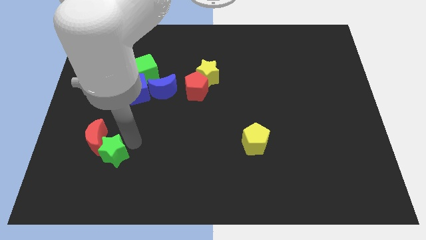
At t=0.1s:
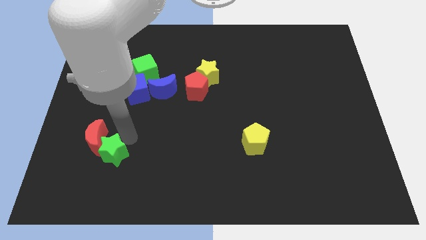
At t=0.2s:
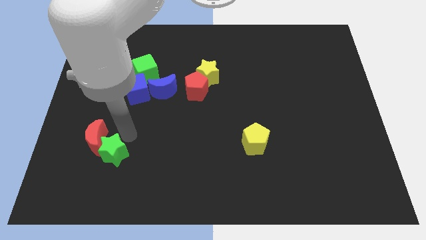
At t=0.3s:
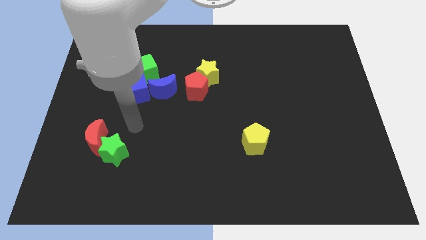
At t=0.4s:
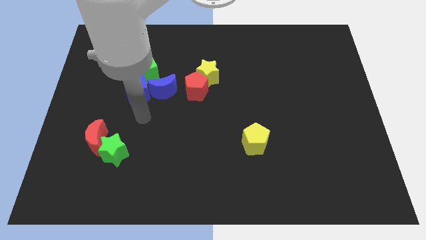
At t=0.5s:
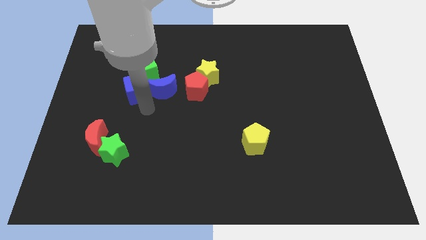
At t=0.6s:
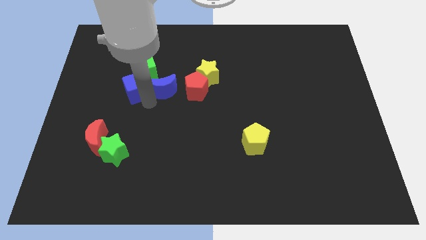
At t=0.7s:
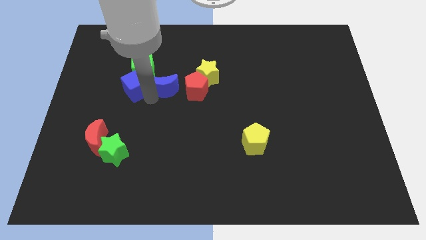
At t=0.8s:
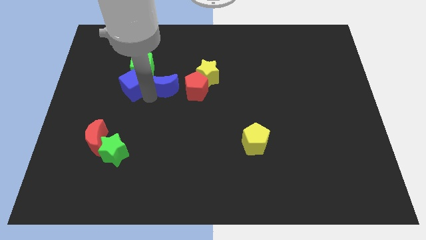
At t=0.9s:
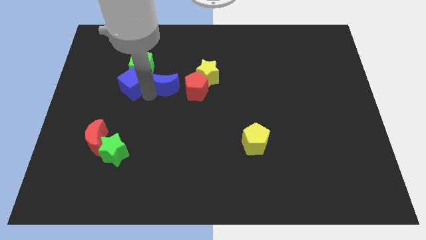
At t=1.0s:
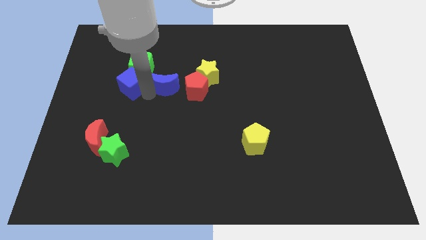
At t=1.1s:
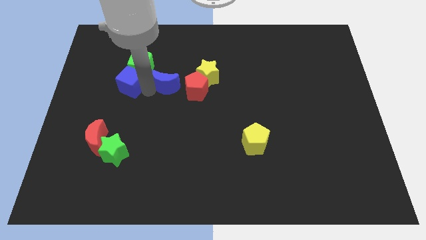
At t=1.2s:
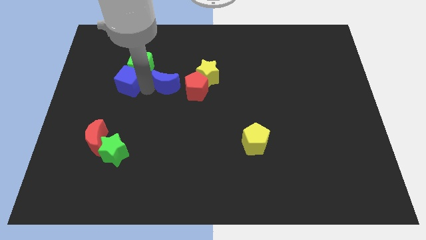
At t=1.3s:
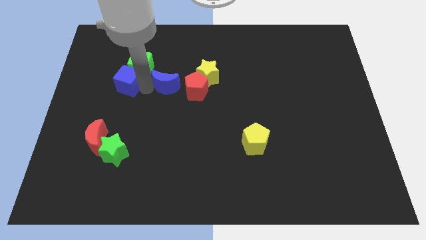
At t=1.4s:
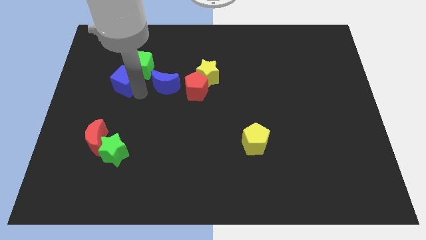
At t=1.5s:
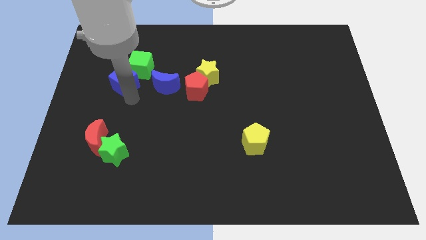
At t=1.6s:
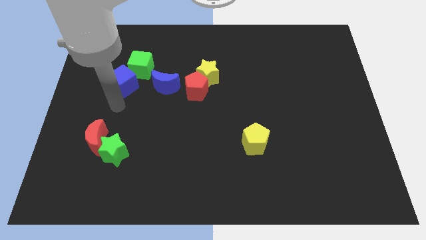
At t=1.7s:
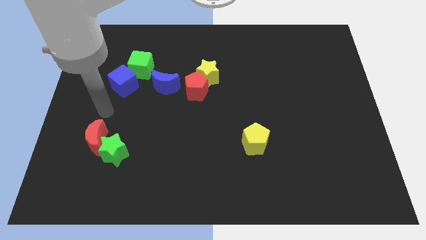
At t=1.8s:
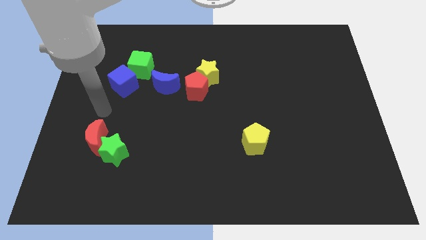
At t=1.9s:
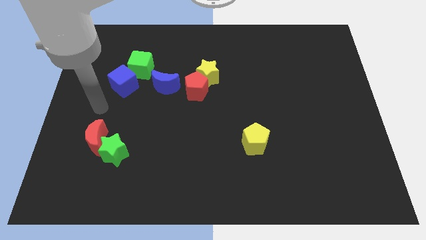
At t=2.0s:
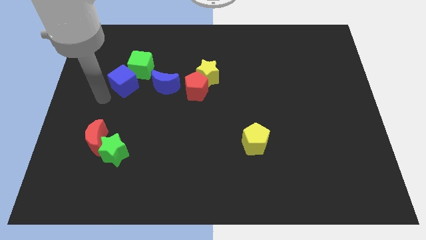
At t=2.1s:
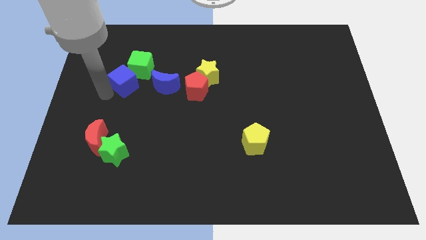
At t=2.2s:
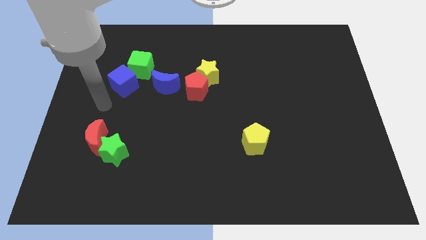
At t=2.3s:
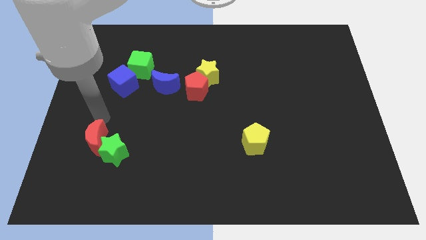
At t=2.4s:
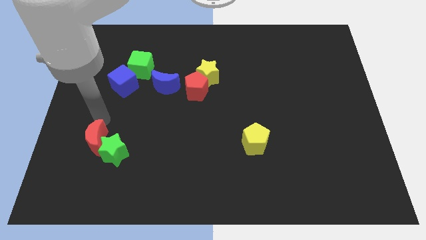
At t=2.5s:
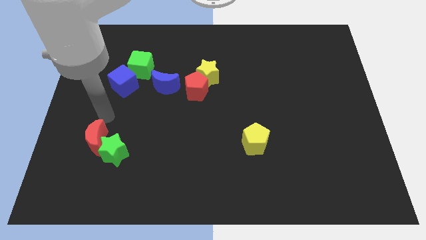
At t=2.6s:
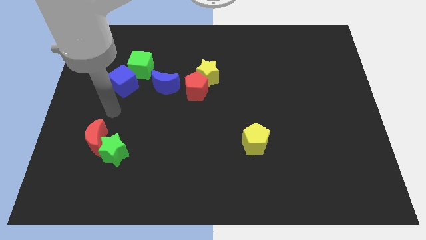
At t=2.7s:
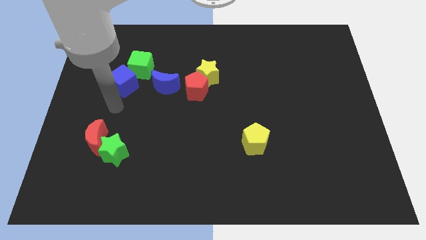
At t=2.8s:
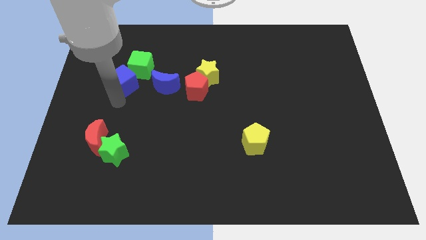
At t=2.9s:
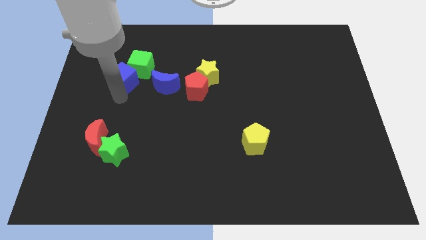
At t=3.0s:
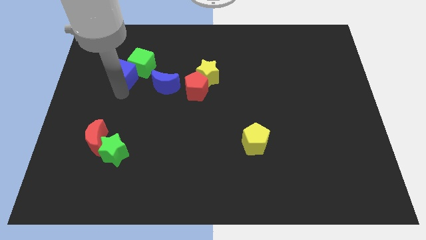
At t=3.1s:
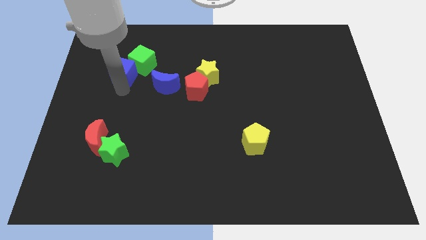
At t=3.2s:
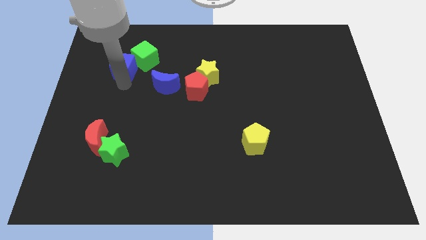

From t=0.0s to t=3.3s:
push the blue cube with the green cube towards up

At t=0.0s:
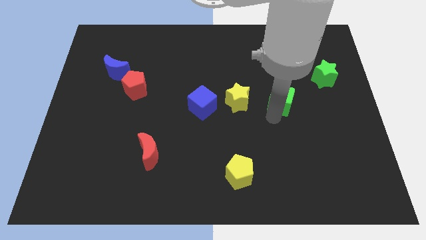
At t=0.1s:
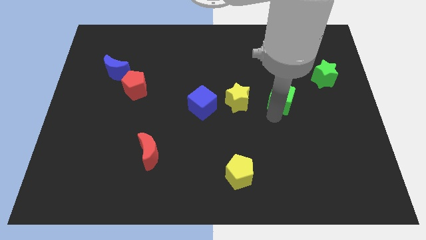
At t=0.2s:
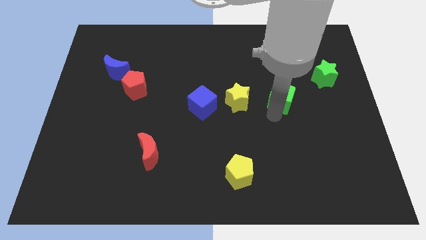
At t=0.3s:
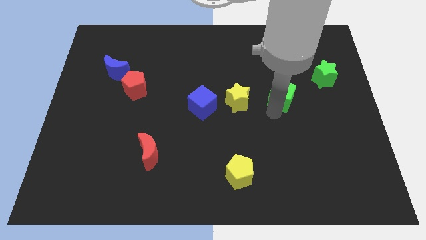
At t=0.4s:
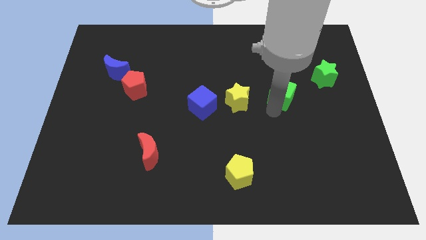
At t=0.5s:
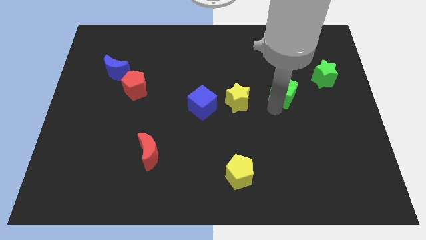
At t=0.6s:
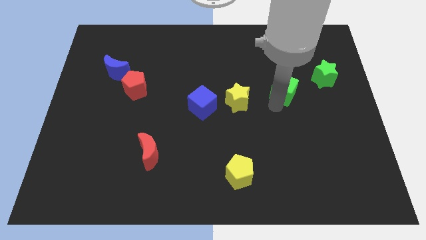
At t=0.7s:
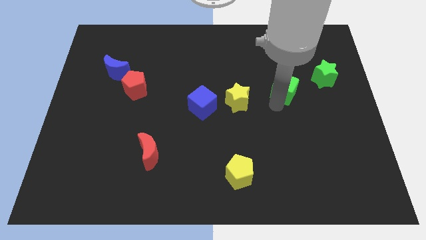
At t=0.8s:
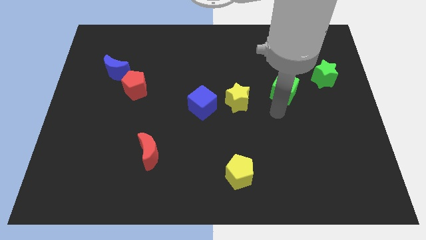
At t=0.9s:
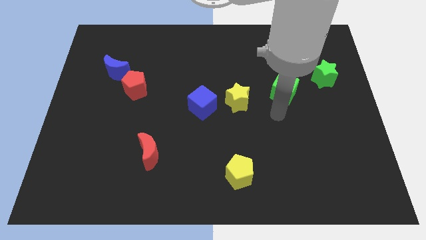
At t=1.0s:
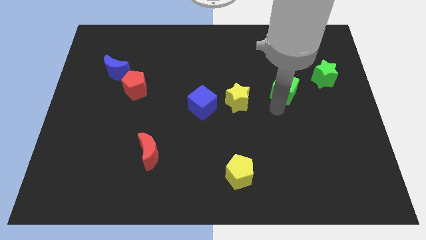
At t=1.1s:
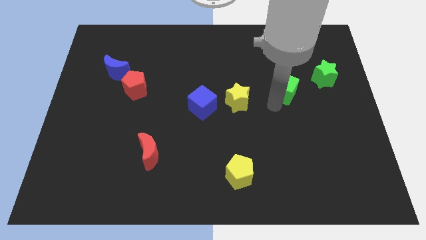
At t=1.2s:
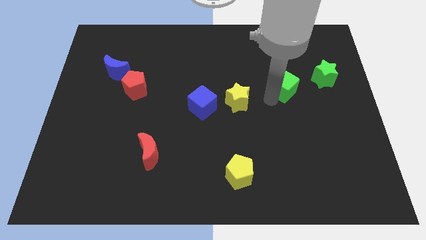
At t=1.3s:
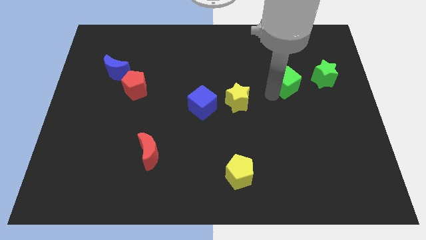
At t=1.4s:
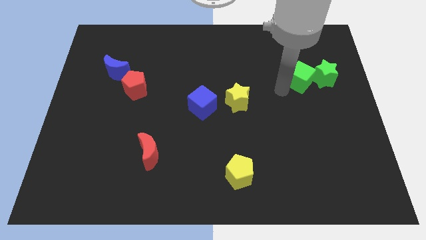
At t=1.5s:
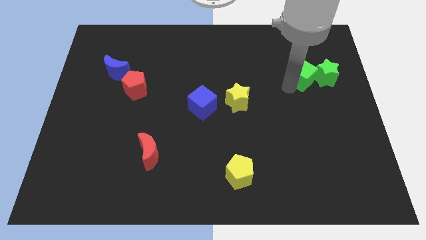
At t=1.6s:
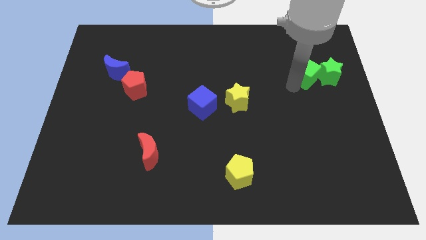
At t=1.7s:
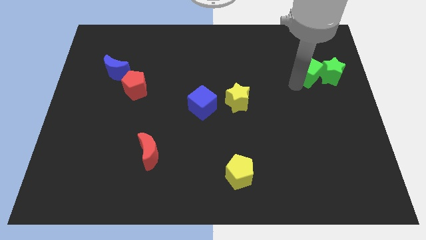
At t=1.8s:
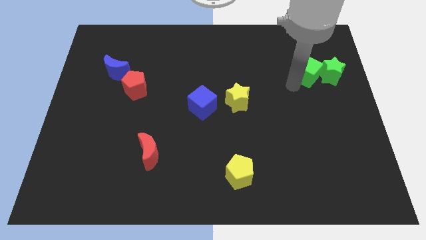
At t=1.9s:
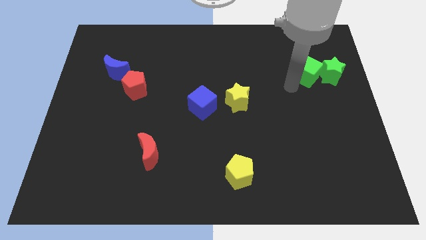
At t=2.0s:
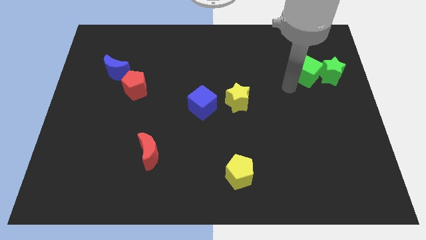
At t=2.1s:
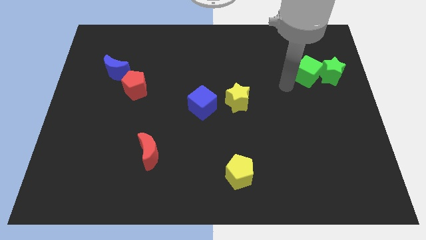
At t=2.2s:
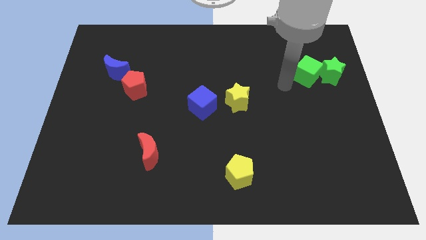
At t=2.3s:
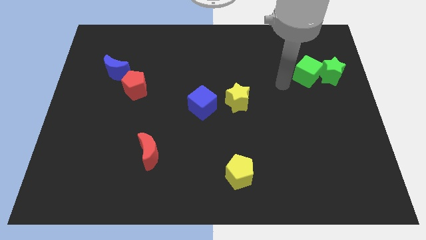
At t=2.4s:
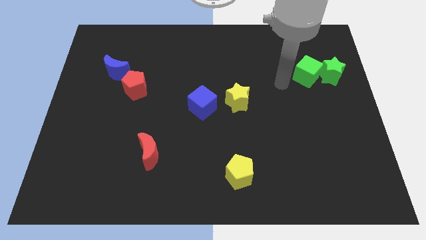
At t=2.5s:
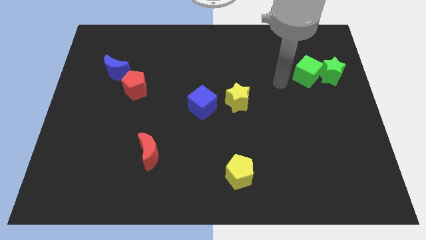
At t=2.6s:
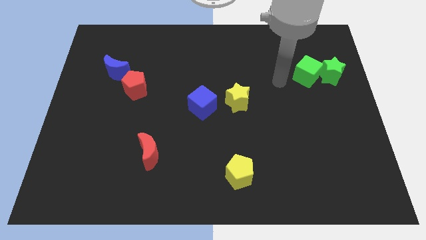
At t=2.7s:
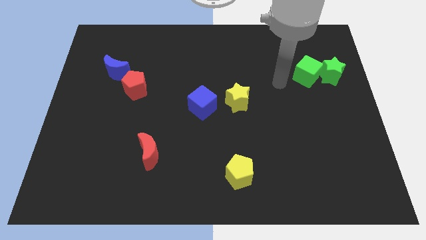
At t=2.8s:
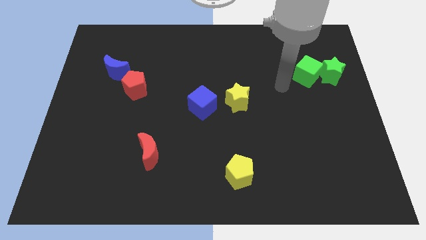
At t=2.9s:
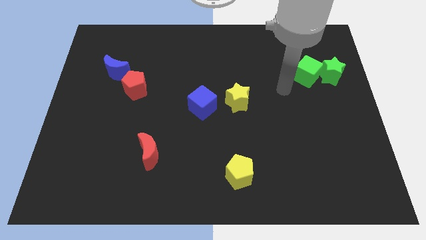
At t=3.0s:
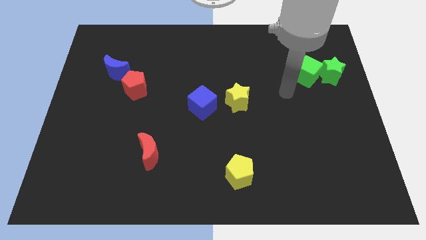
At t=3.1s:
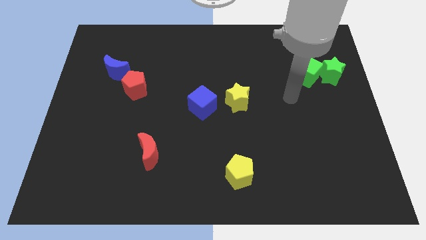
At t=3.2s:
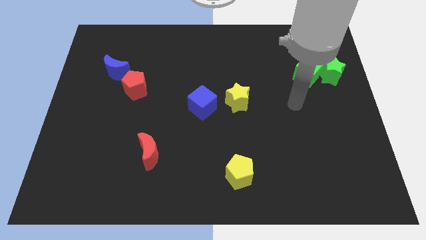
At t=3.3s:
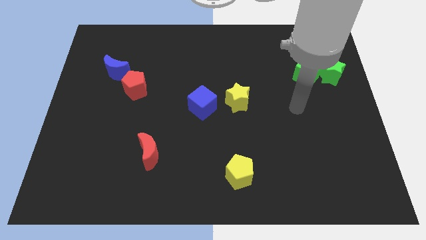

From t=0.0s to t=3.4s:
push the green cube into the green star

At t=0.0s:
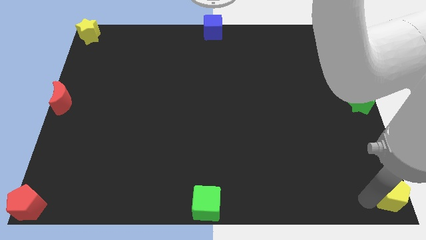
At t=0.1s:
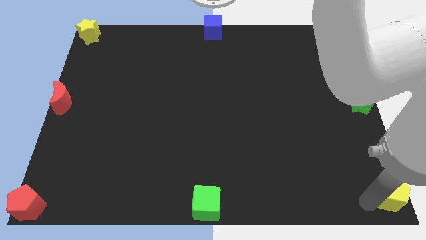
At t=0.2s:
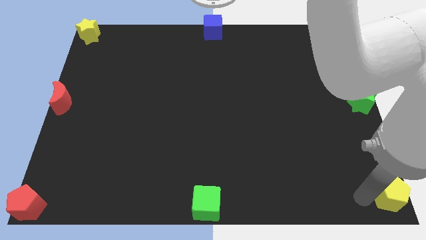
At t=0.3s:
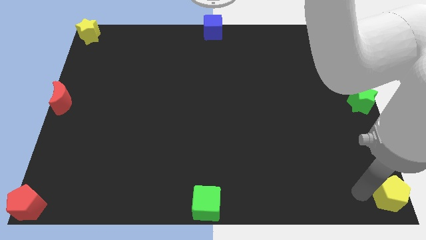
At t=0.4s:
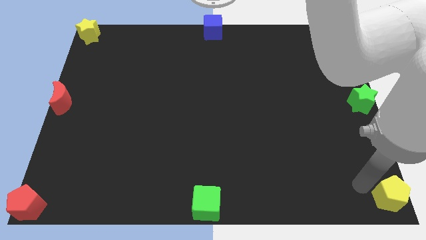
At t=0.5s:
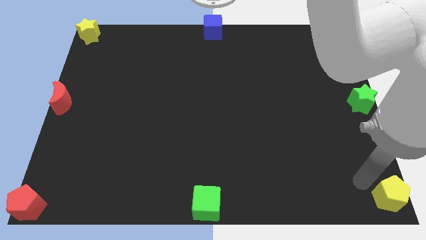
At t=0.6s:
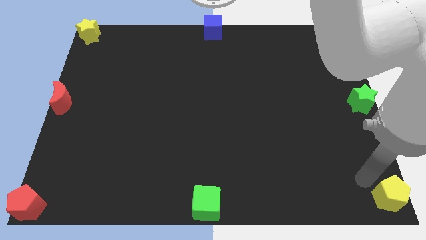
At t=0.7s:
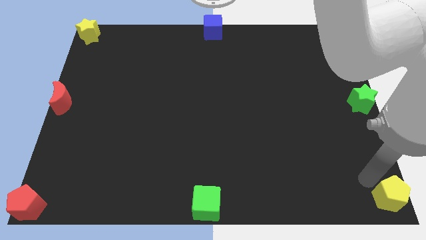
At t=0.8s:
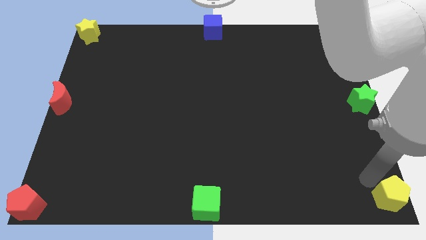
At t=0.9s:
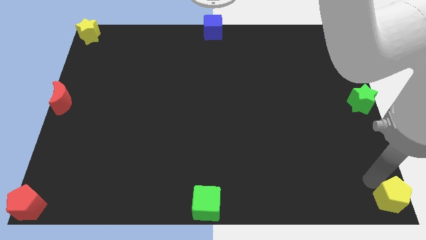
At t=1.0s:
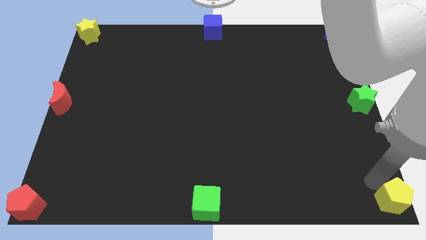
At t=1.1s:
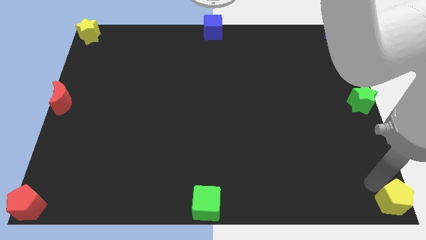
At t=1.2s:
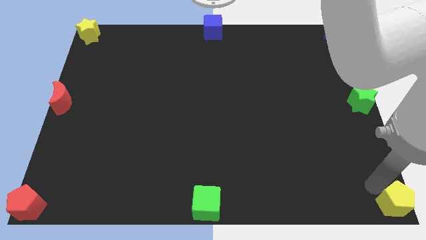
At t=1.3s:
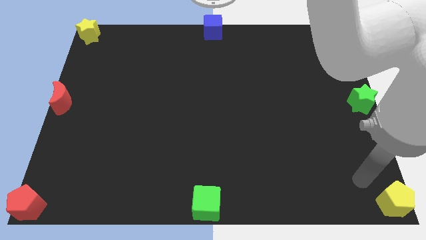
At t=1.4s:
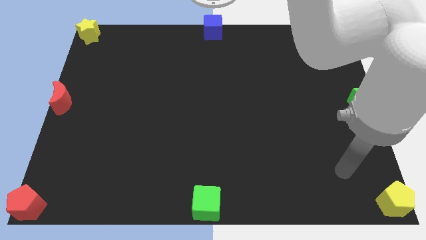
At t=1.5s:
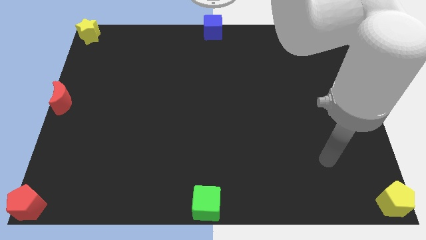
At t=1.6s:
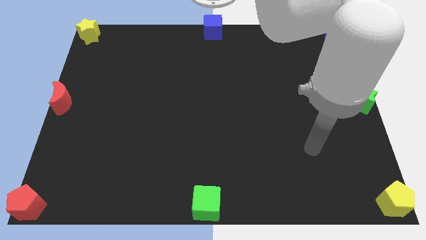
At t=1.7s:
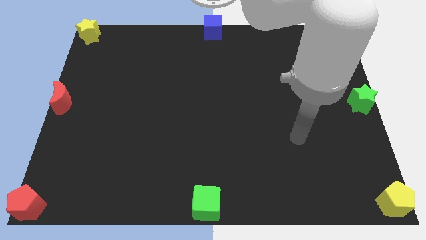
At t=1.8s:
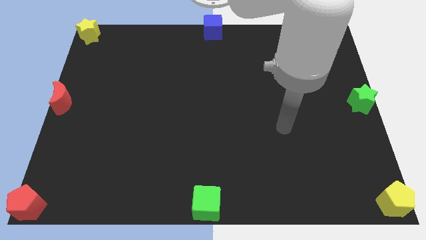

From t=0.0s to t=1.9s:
push the yellow pentagon to the bottom right side corner of the board

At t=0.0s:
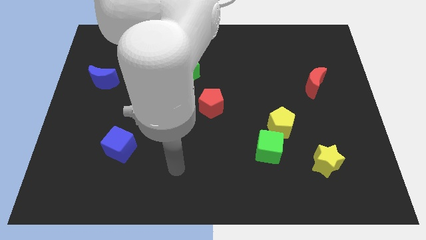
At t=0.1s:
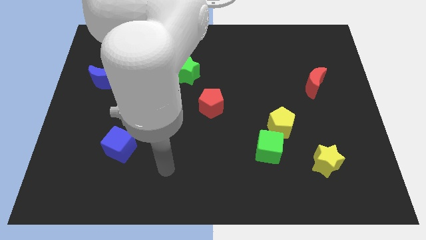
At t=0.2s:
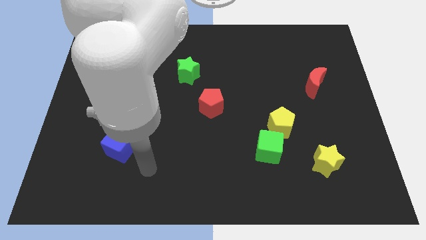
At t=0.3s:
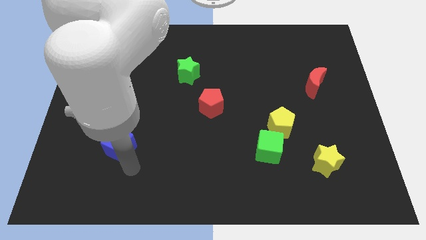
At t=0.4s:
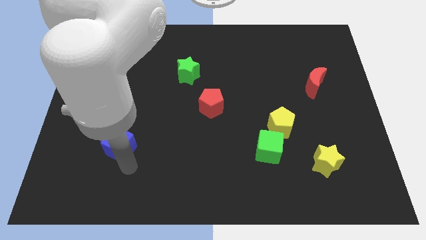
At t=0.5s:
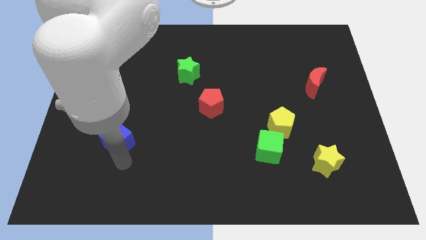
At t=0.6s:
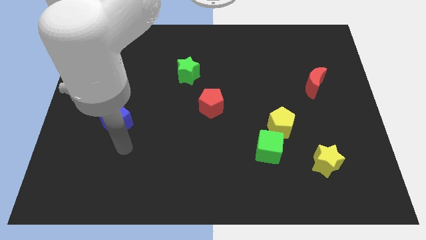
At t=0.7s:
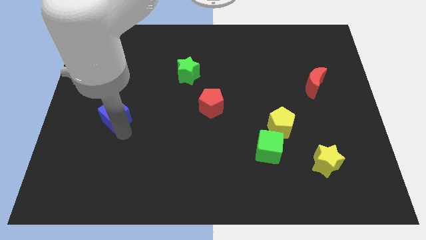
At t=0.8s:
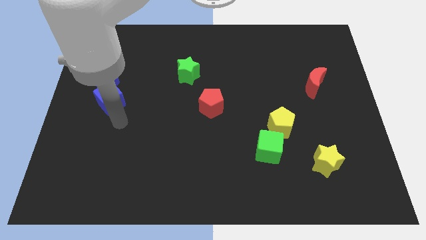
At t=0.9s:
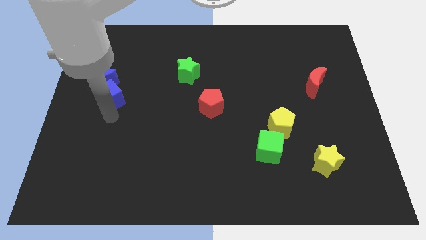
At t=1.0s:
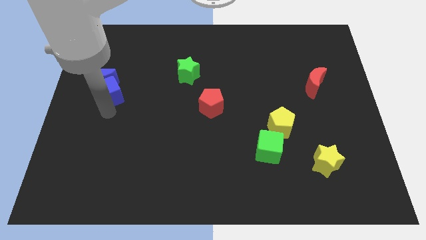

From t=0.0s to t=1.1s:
move the blue cube into the bottom side of the blue crescent
